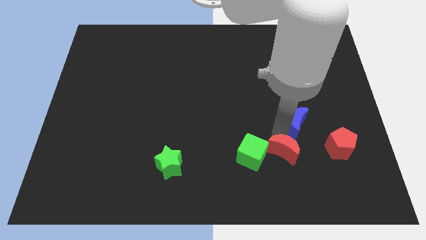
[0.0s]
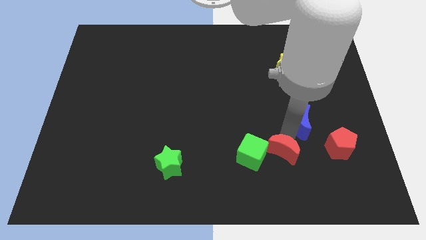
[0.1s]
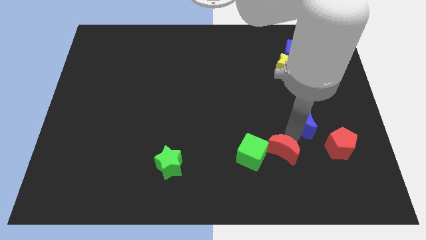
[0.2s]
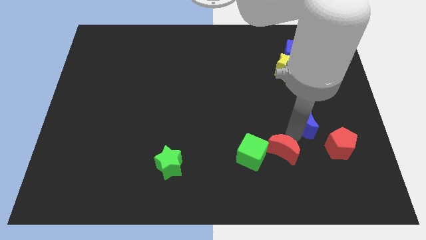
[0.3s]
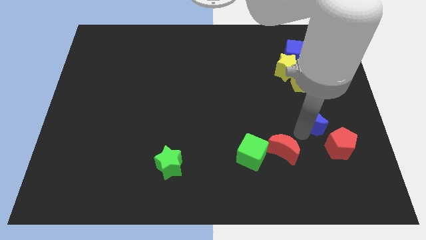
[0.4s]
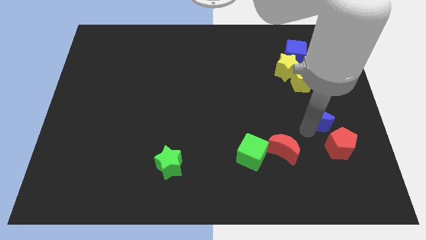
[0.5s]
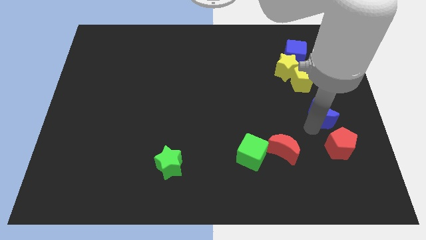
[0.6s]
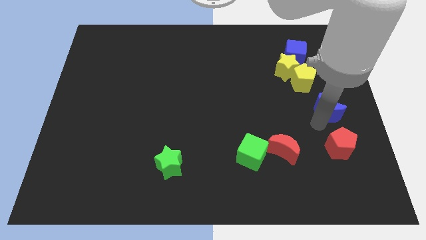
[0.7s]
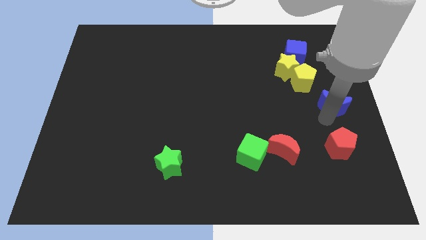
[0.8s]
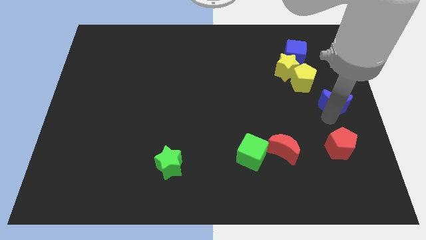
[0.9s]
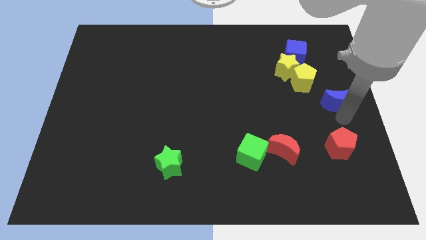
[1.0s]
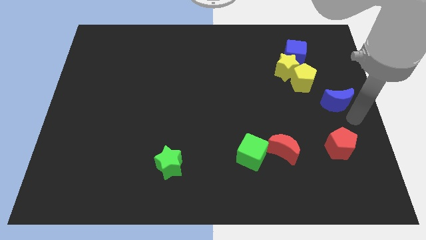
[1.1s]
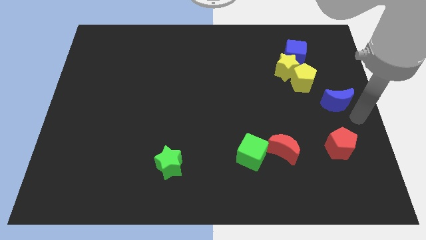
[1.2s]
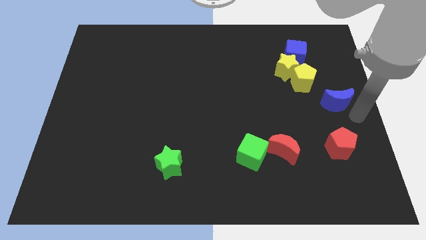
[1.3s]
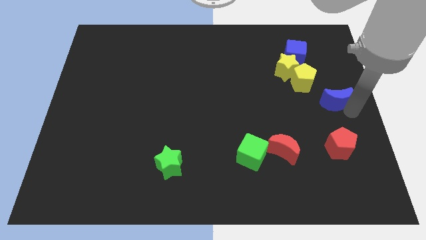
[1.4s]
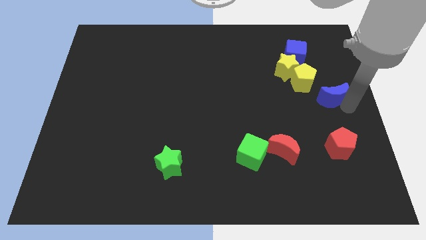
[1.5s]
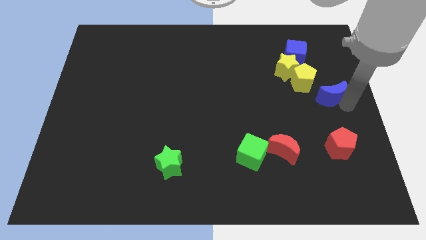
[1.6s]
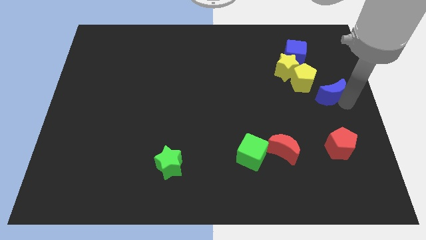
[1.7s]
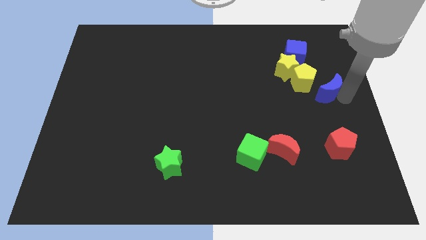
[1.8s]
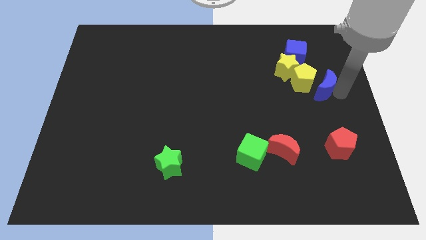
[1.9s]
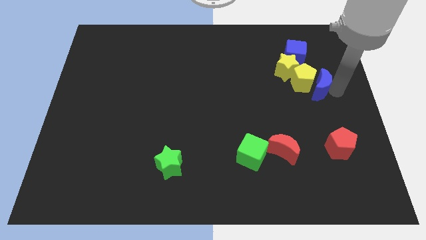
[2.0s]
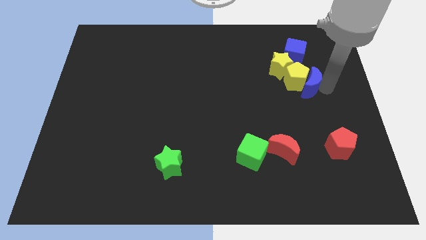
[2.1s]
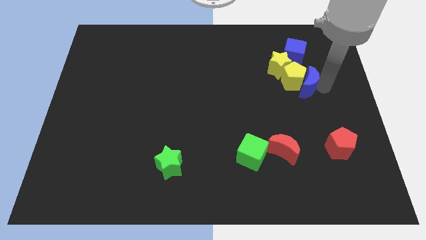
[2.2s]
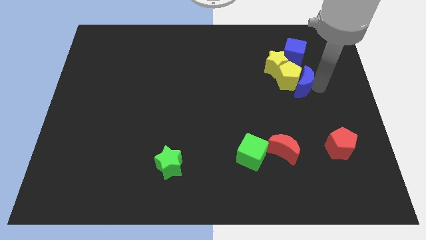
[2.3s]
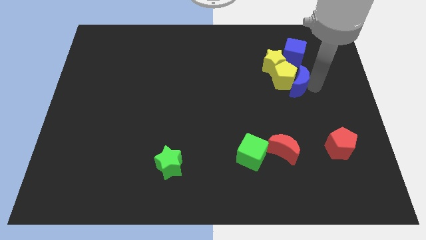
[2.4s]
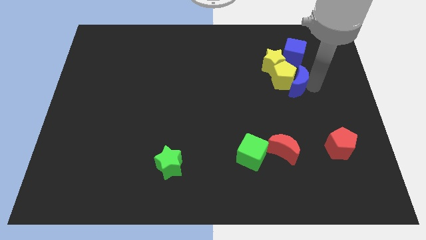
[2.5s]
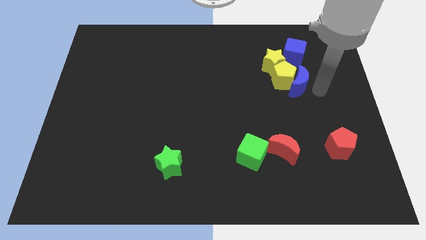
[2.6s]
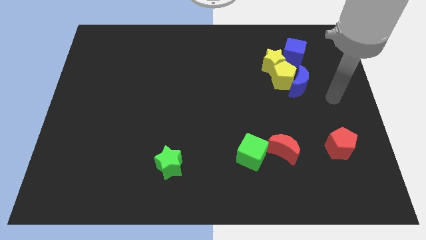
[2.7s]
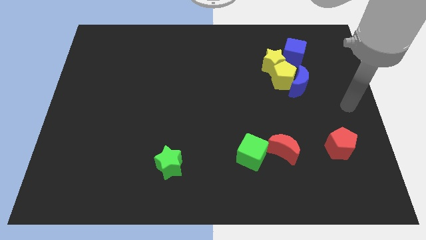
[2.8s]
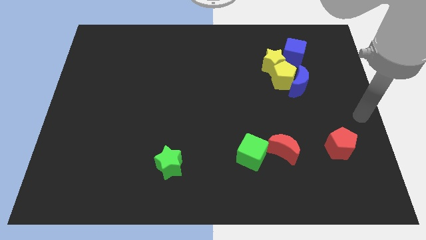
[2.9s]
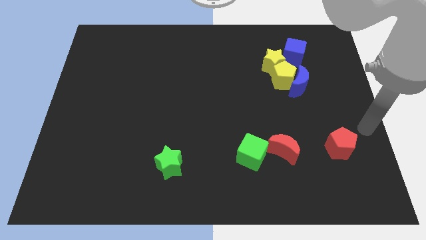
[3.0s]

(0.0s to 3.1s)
push the blue moon into the yellow pentagon

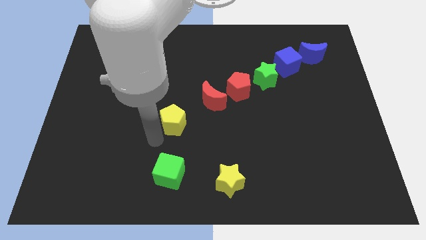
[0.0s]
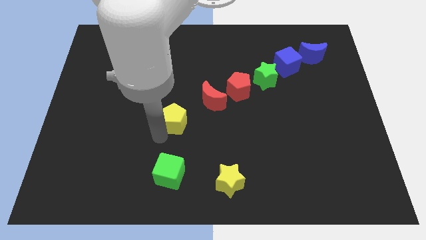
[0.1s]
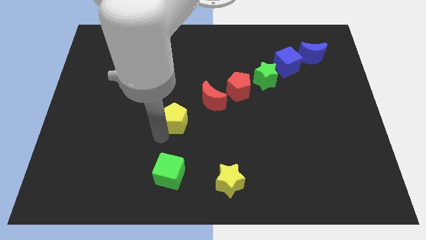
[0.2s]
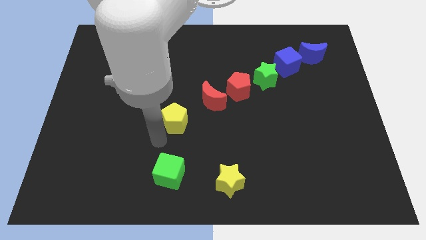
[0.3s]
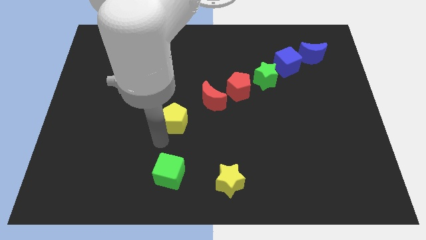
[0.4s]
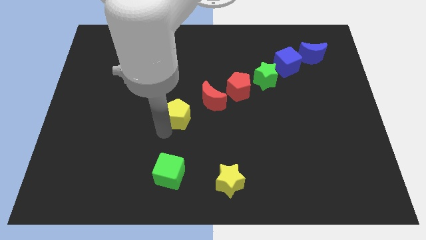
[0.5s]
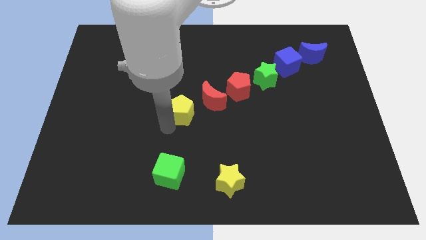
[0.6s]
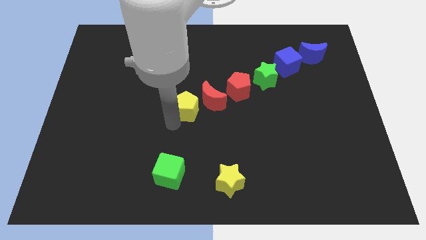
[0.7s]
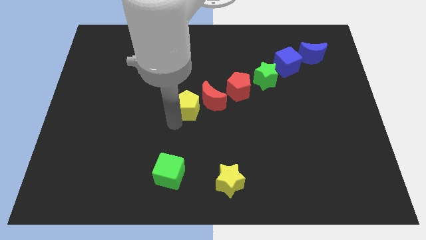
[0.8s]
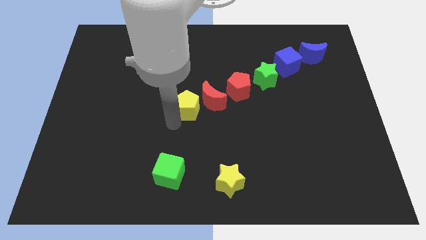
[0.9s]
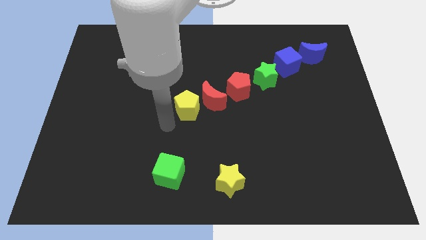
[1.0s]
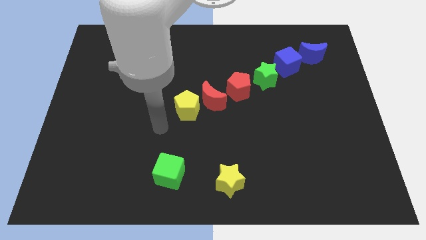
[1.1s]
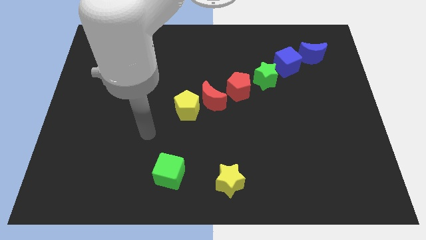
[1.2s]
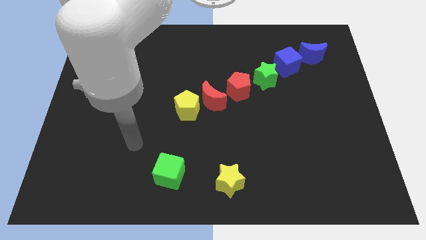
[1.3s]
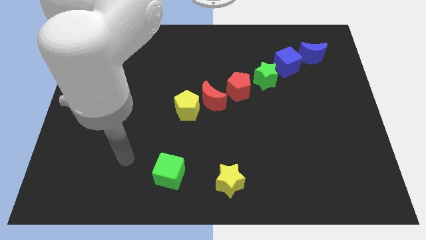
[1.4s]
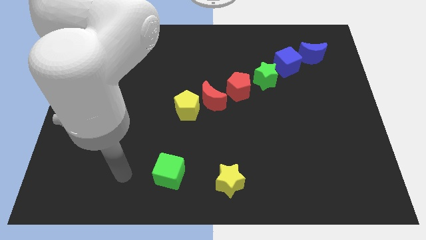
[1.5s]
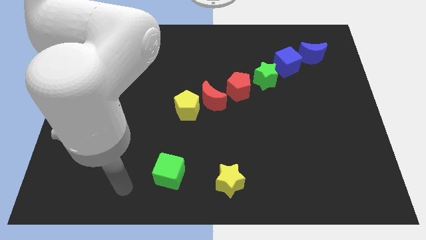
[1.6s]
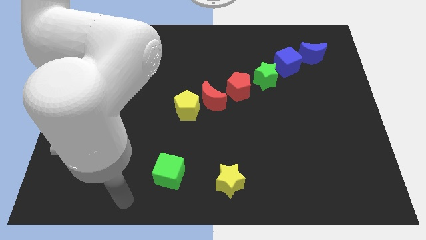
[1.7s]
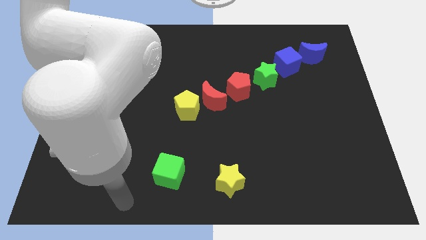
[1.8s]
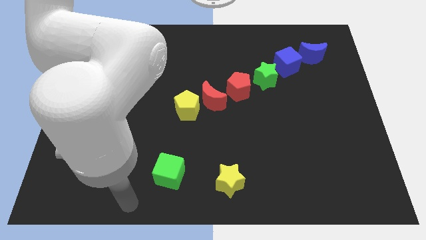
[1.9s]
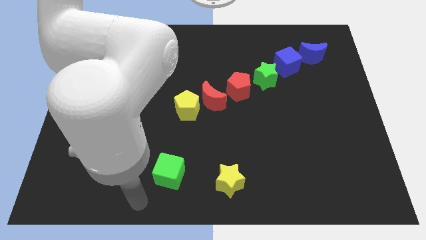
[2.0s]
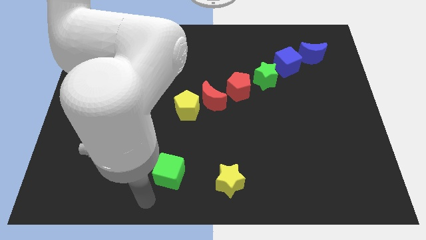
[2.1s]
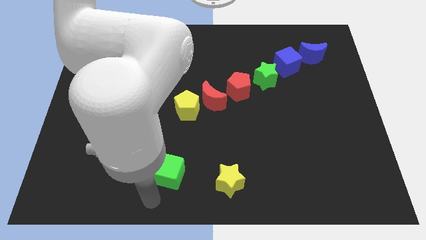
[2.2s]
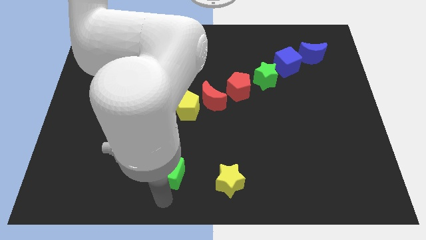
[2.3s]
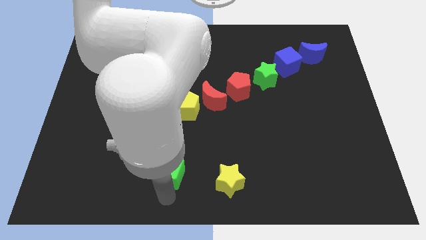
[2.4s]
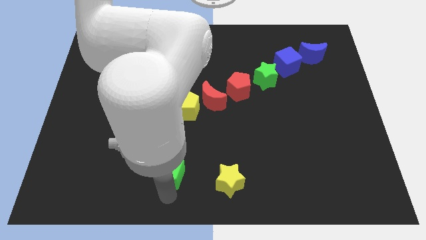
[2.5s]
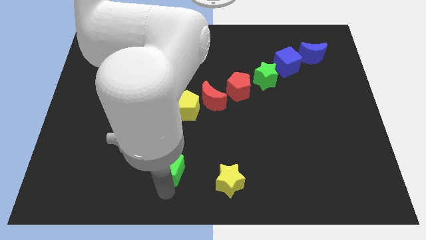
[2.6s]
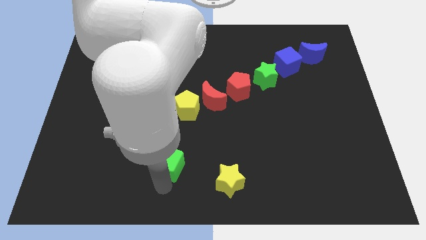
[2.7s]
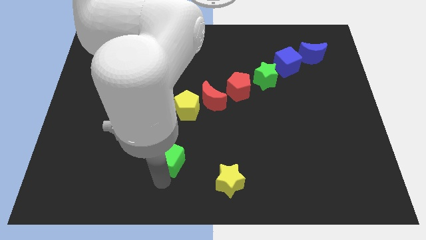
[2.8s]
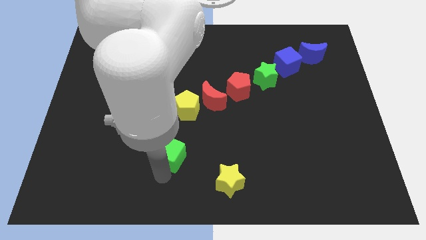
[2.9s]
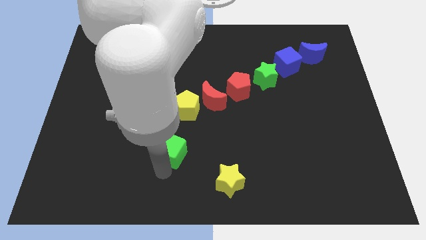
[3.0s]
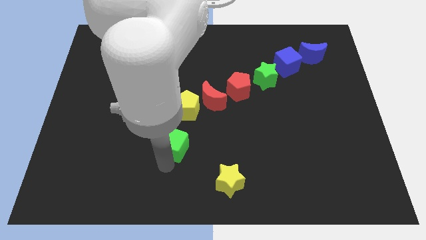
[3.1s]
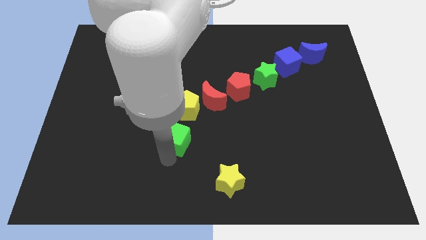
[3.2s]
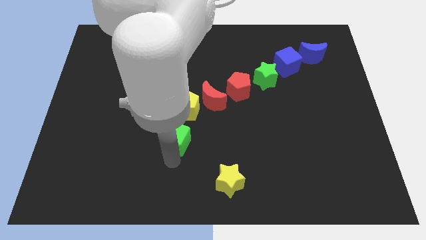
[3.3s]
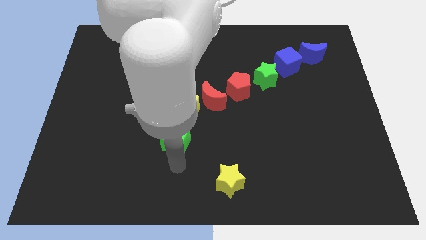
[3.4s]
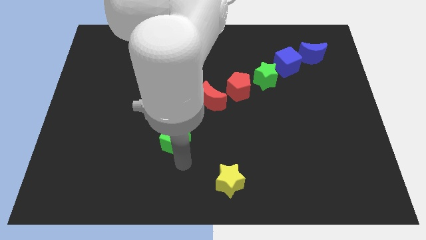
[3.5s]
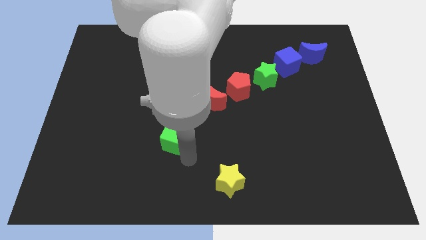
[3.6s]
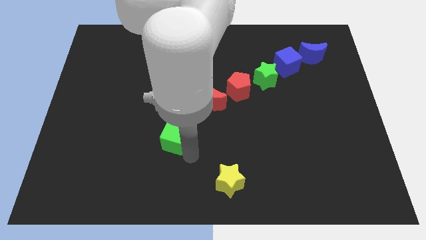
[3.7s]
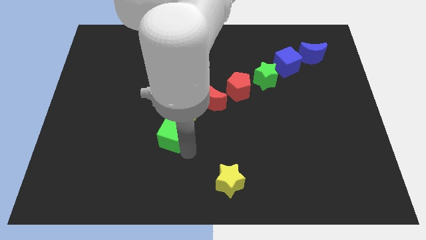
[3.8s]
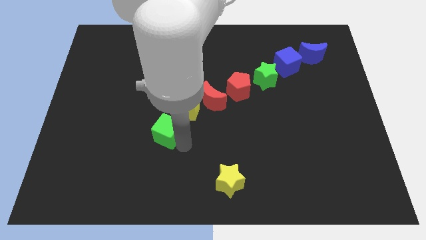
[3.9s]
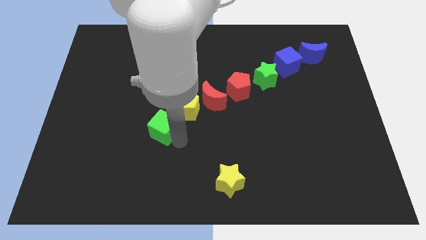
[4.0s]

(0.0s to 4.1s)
move the yellow penatgon and green cube to the center

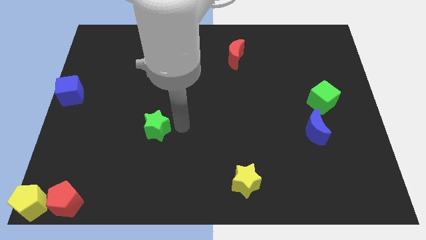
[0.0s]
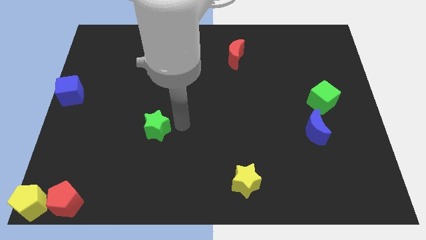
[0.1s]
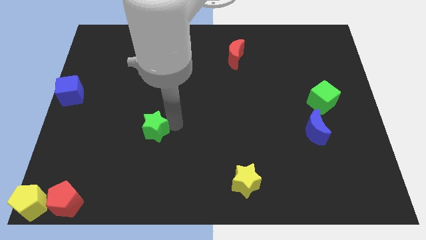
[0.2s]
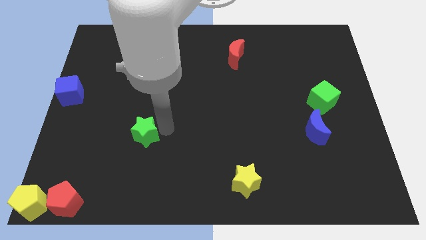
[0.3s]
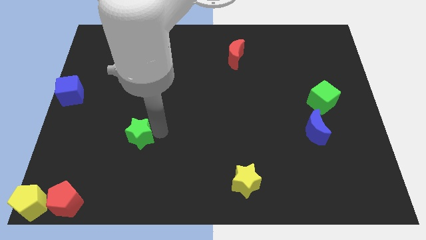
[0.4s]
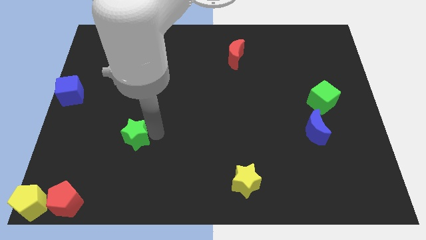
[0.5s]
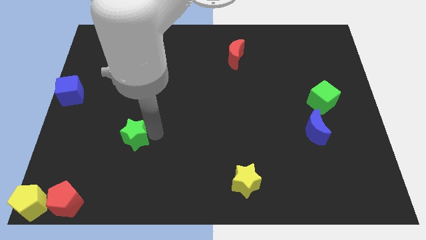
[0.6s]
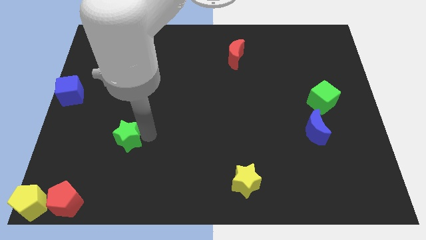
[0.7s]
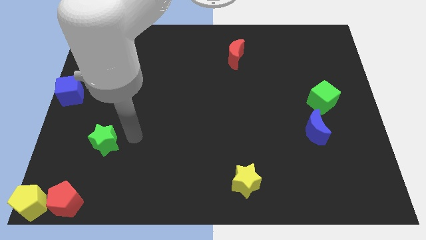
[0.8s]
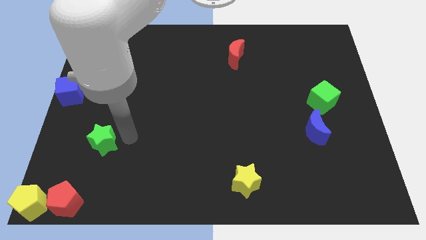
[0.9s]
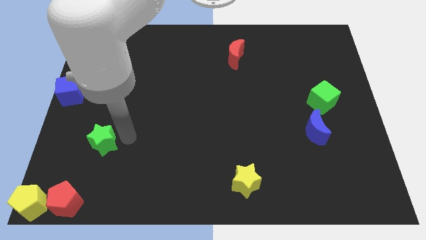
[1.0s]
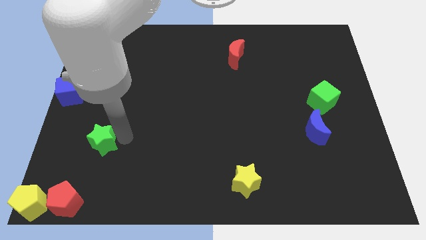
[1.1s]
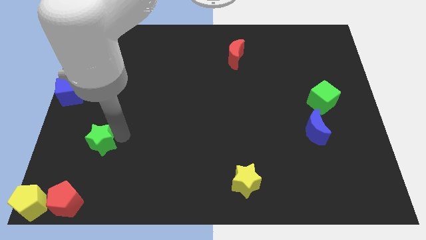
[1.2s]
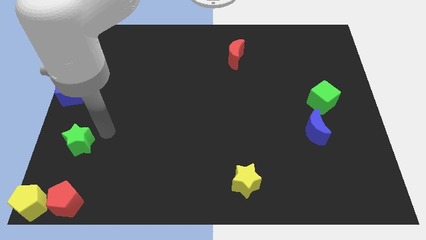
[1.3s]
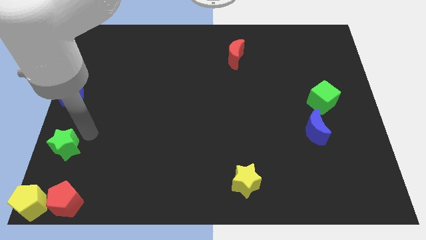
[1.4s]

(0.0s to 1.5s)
push the green star in between the red pentagon and blue cube

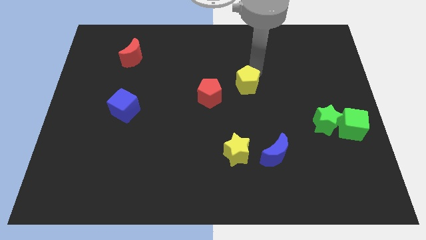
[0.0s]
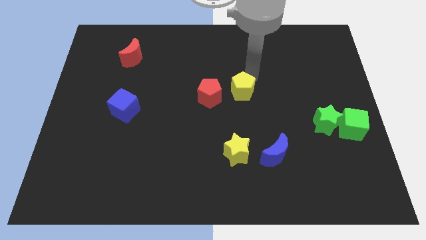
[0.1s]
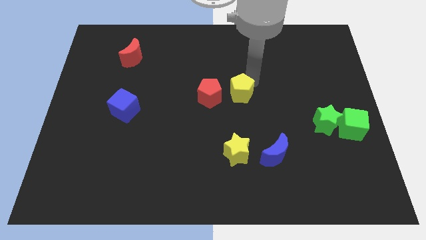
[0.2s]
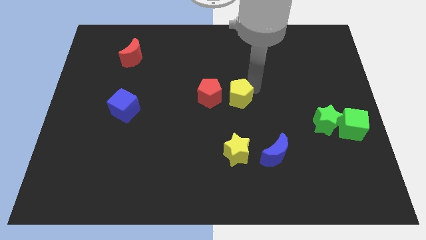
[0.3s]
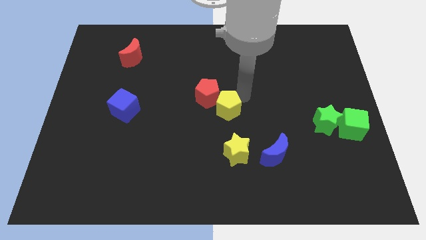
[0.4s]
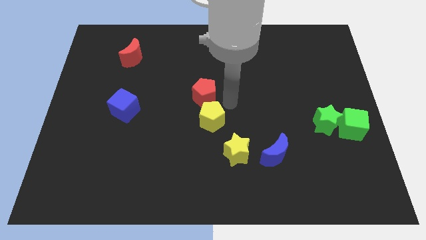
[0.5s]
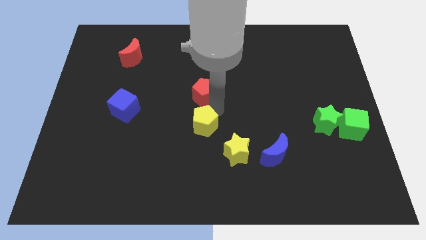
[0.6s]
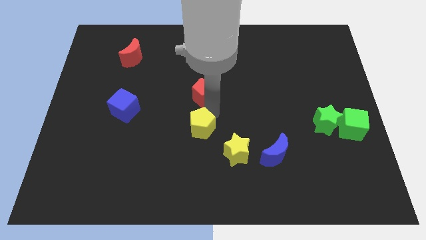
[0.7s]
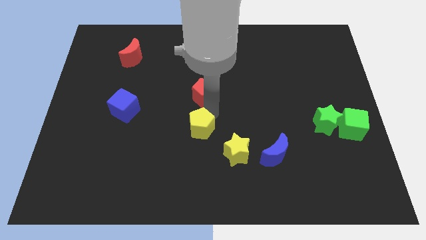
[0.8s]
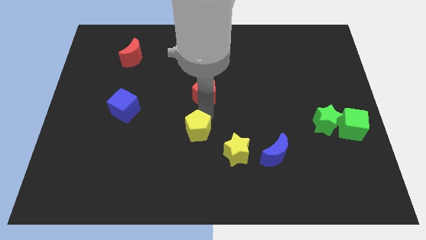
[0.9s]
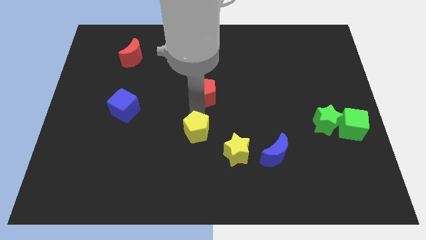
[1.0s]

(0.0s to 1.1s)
push the yellow pentagon into the red pentagon
